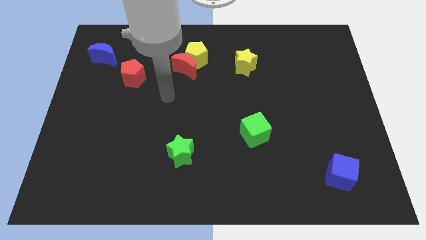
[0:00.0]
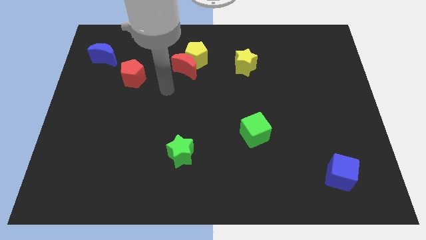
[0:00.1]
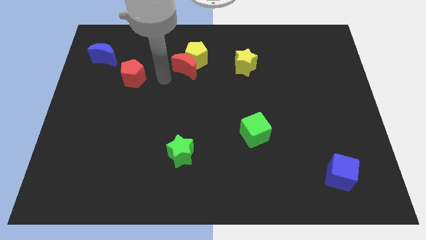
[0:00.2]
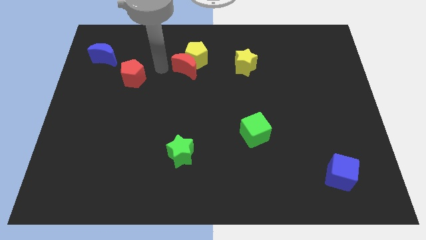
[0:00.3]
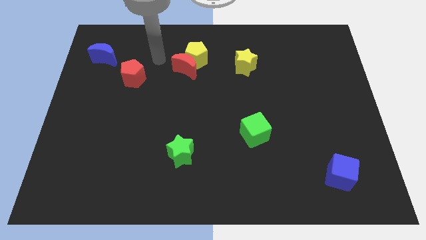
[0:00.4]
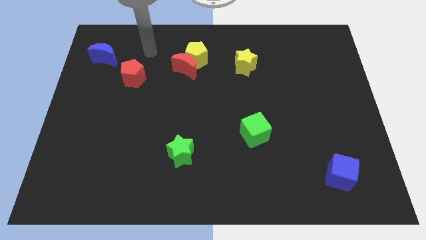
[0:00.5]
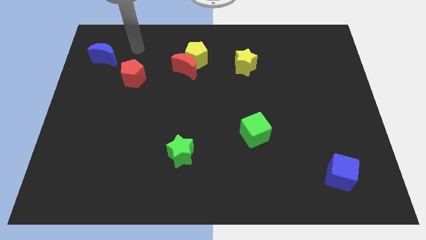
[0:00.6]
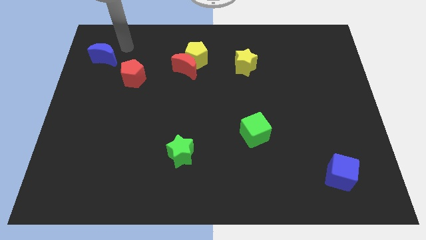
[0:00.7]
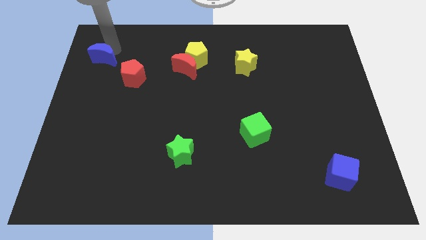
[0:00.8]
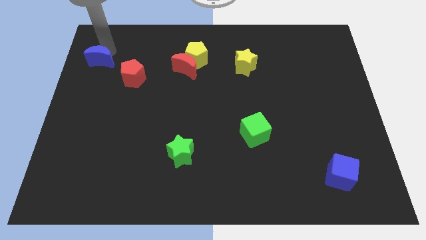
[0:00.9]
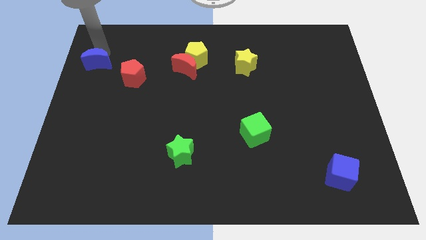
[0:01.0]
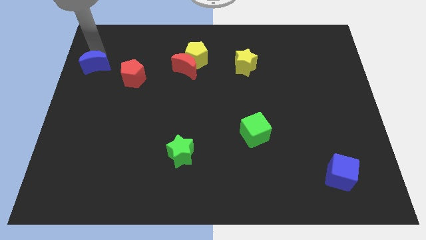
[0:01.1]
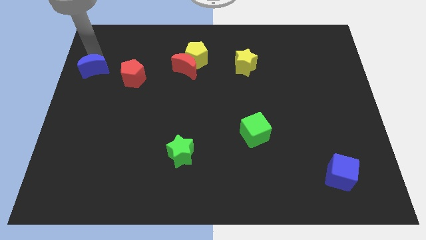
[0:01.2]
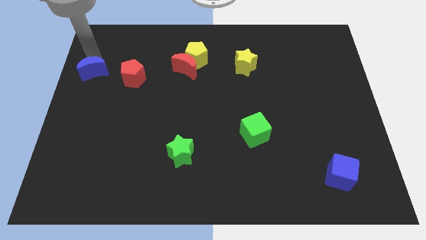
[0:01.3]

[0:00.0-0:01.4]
place blue moon to the left of red pentagon

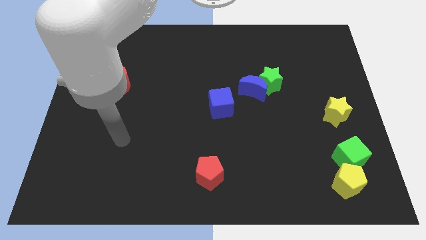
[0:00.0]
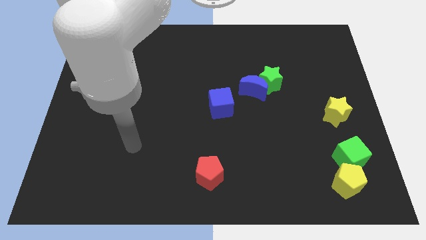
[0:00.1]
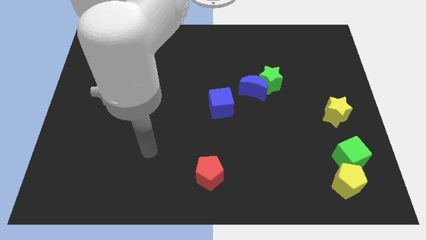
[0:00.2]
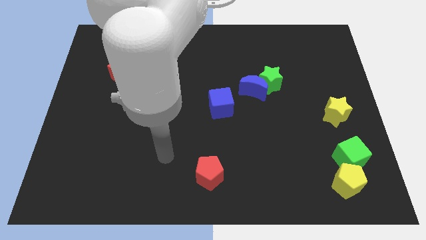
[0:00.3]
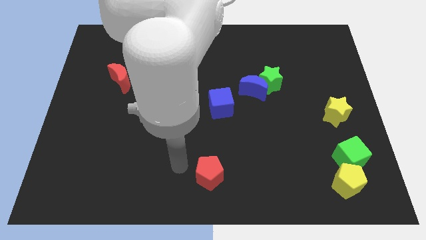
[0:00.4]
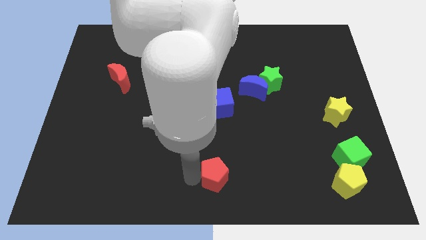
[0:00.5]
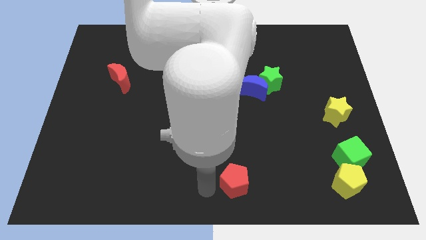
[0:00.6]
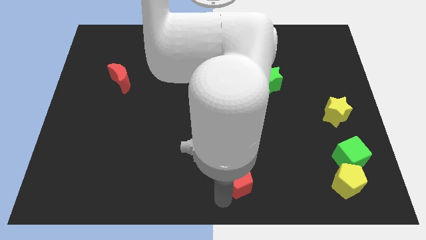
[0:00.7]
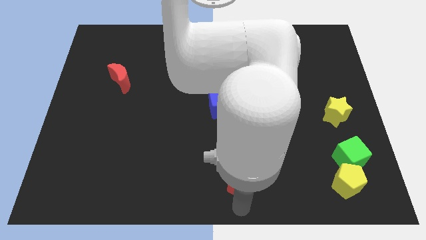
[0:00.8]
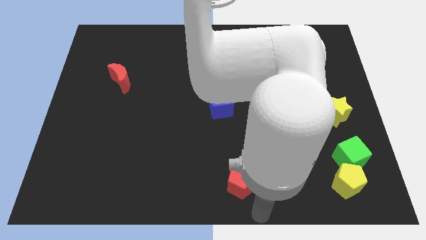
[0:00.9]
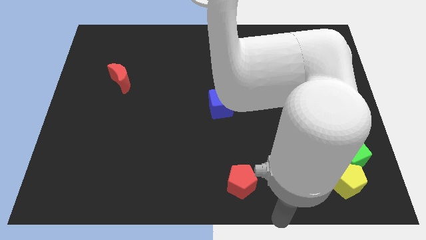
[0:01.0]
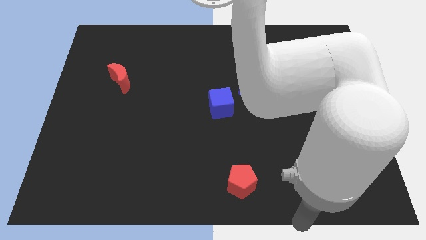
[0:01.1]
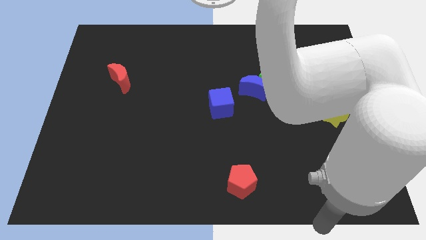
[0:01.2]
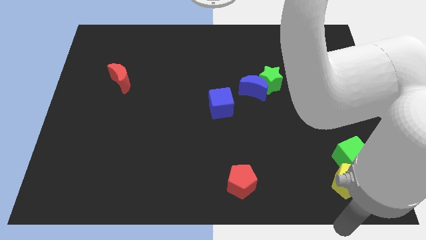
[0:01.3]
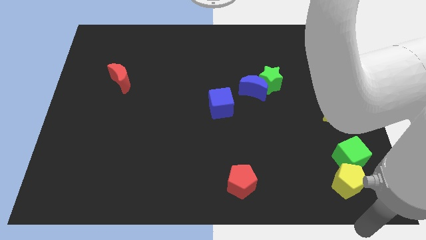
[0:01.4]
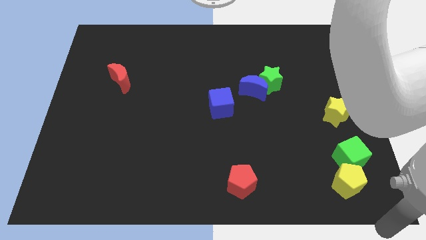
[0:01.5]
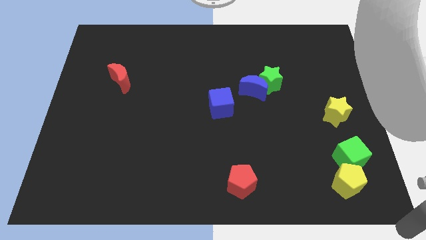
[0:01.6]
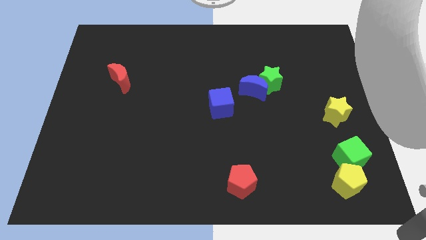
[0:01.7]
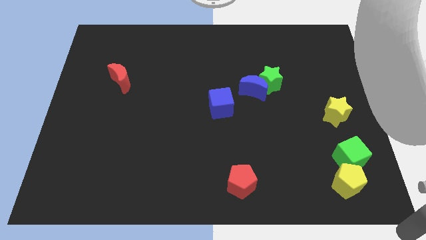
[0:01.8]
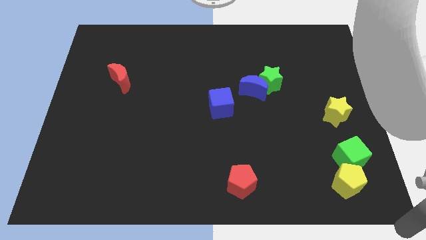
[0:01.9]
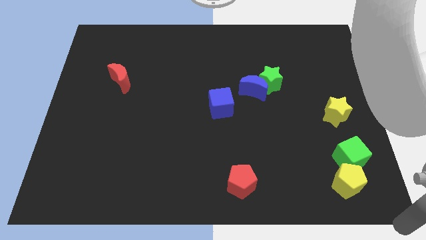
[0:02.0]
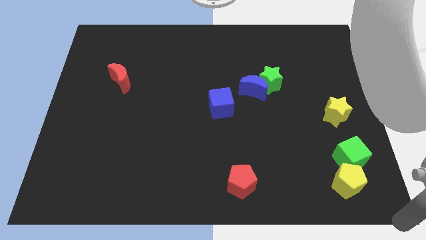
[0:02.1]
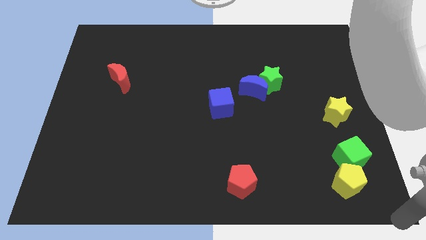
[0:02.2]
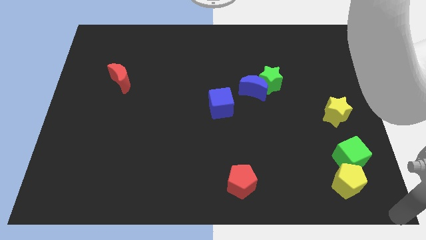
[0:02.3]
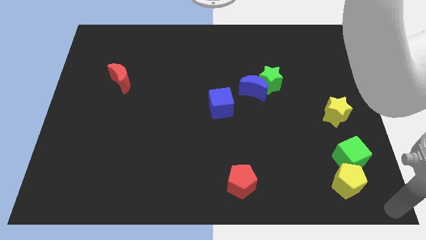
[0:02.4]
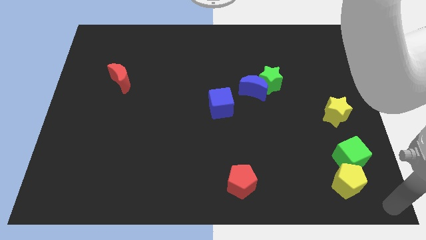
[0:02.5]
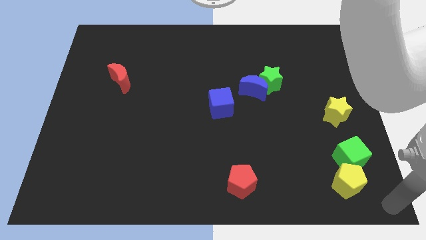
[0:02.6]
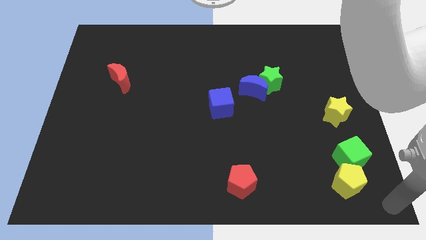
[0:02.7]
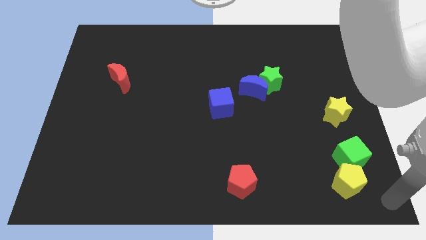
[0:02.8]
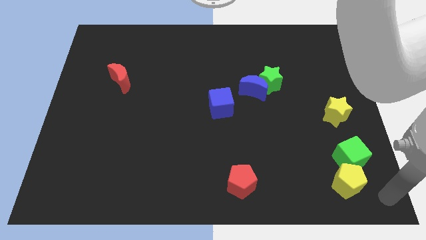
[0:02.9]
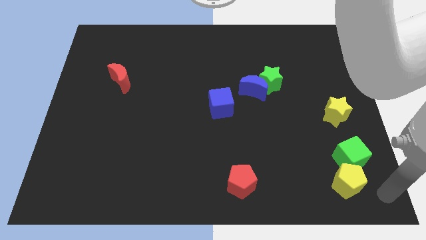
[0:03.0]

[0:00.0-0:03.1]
push the red pentagon slightly to the right

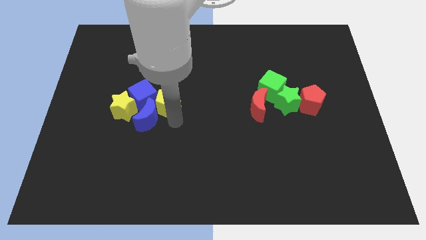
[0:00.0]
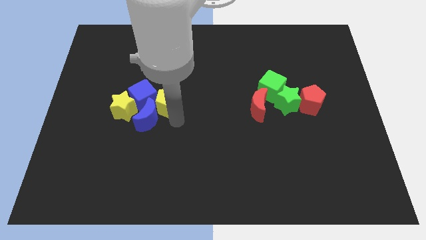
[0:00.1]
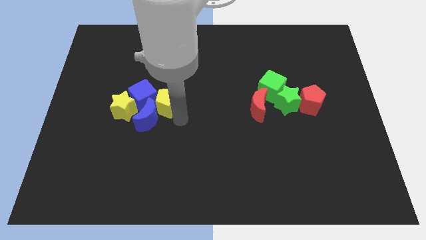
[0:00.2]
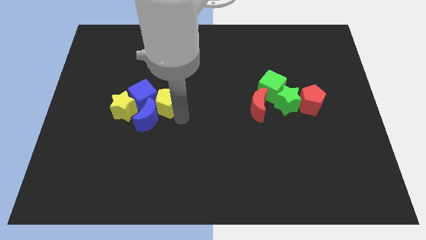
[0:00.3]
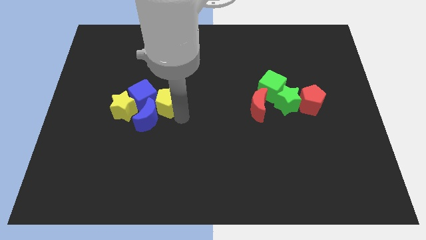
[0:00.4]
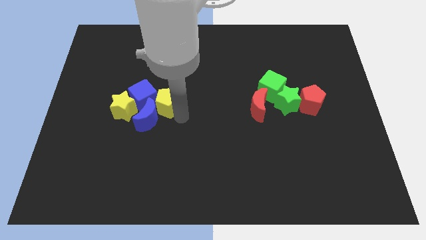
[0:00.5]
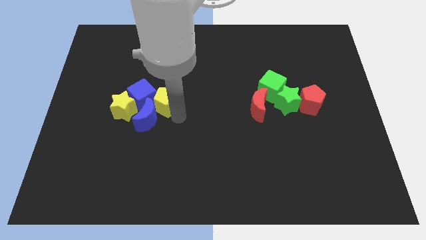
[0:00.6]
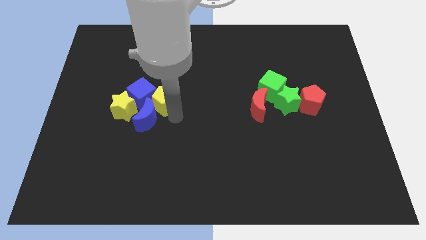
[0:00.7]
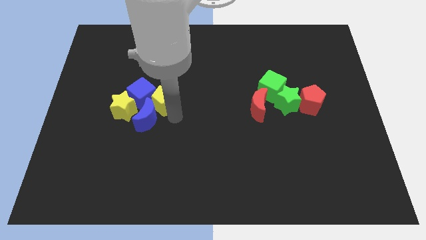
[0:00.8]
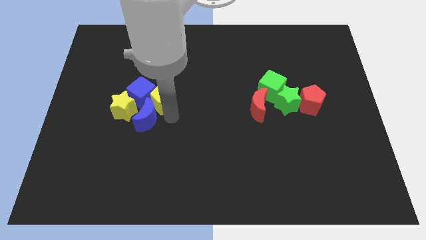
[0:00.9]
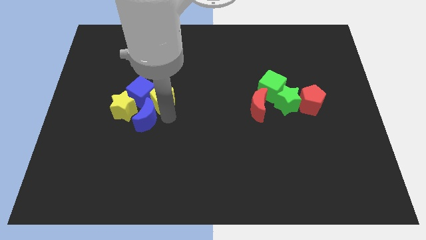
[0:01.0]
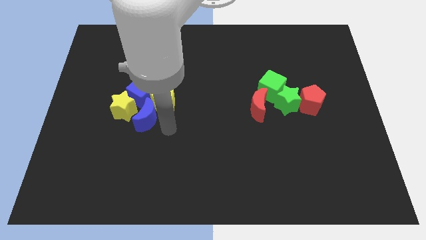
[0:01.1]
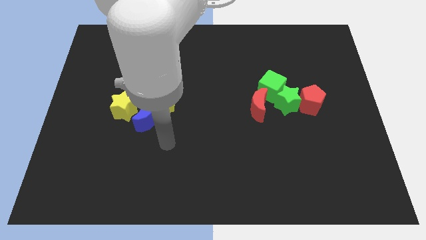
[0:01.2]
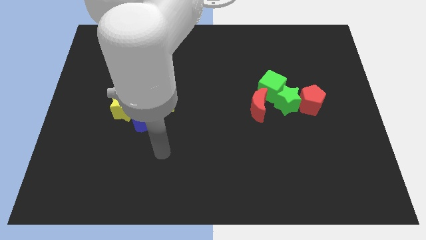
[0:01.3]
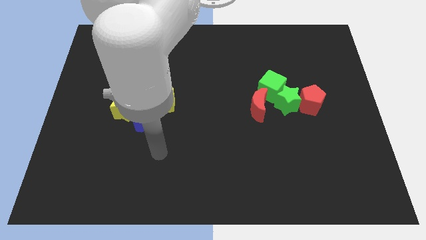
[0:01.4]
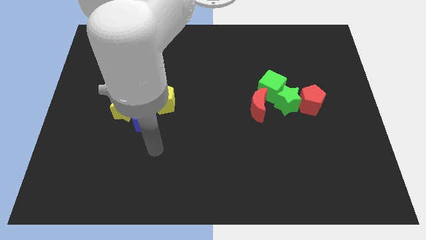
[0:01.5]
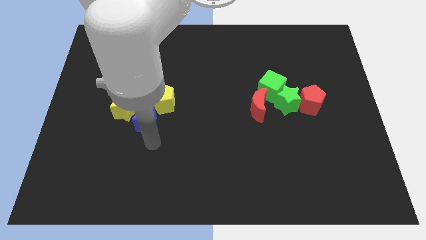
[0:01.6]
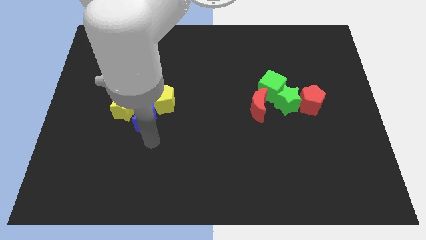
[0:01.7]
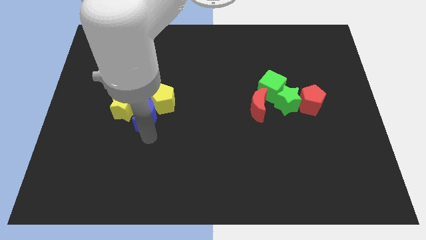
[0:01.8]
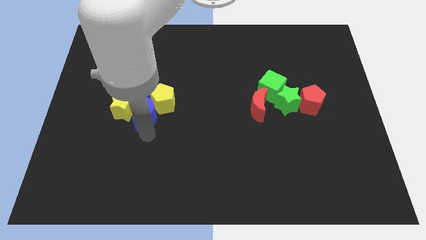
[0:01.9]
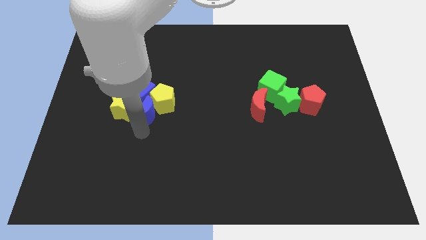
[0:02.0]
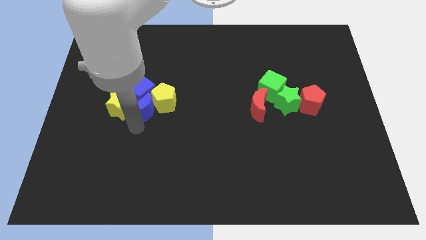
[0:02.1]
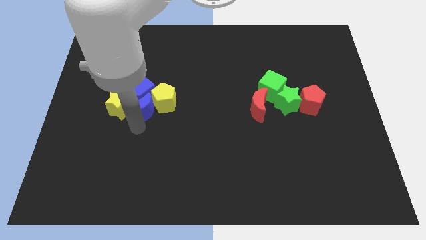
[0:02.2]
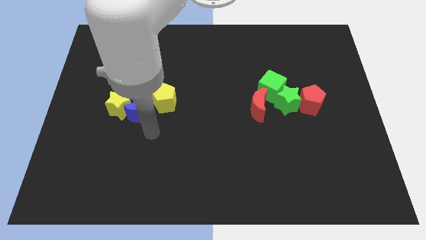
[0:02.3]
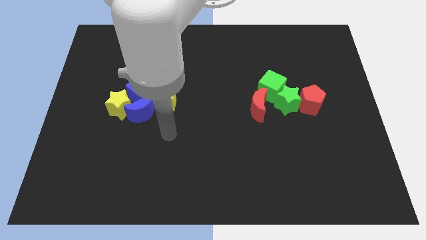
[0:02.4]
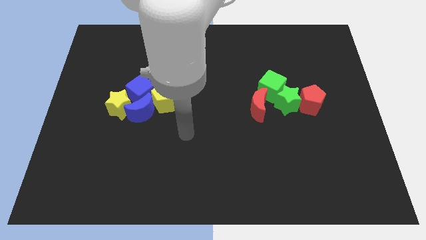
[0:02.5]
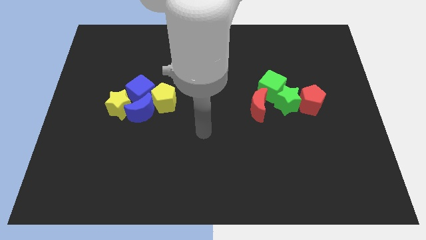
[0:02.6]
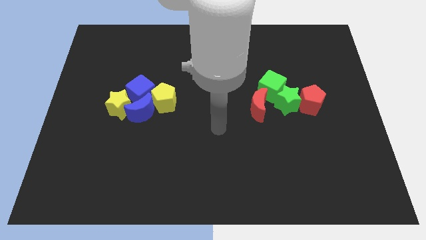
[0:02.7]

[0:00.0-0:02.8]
adjust the blue blocks in between the yellow blocks

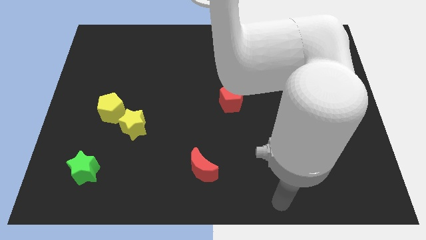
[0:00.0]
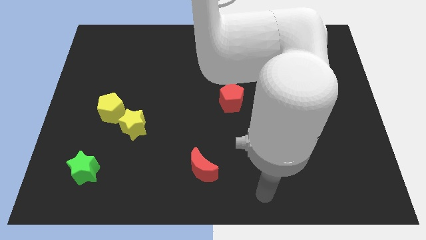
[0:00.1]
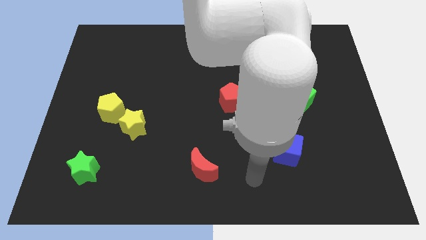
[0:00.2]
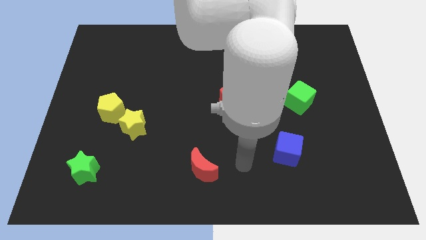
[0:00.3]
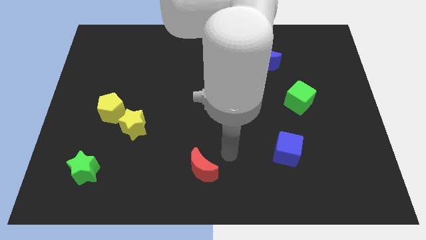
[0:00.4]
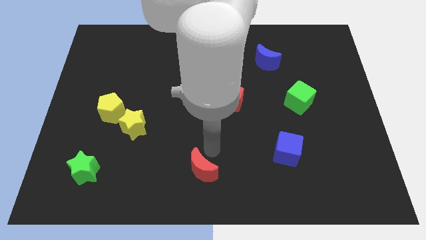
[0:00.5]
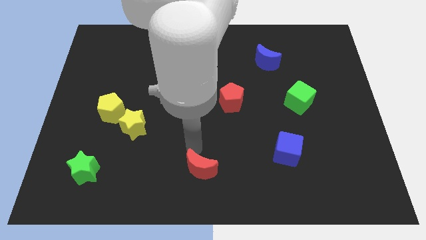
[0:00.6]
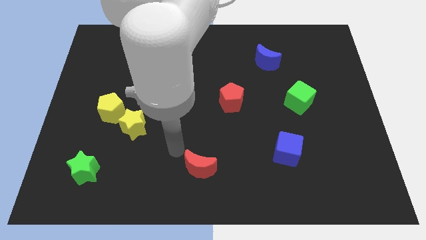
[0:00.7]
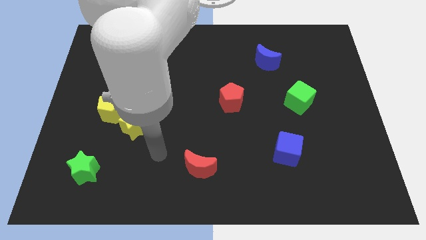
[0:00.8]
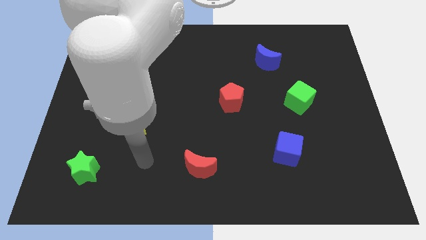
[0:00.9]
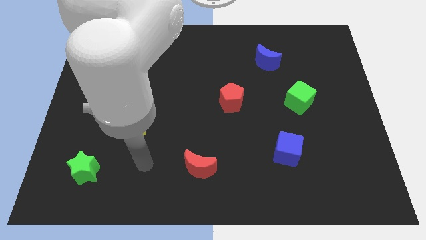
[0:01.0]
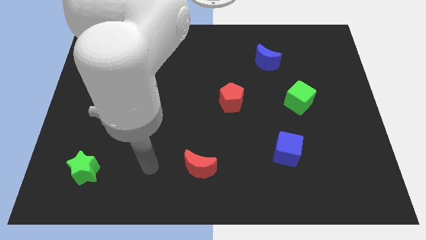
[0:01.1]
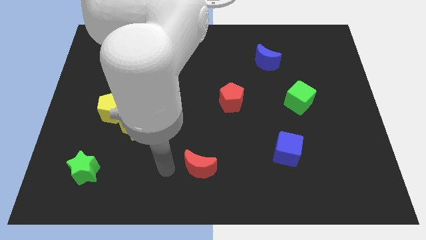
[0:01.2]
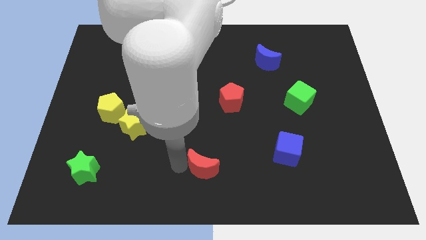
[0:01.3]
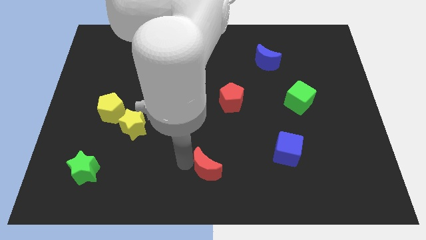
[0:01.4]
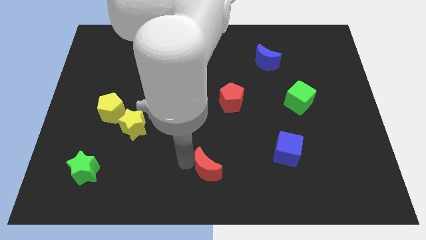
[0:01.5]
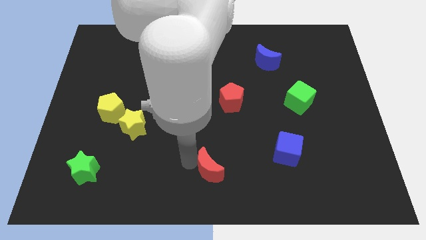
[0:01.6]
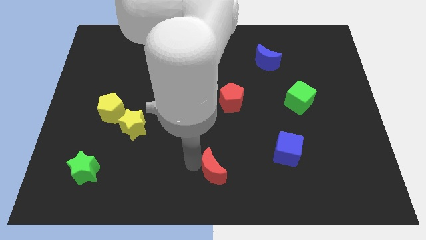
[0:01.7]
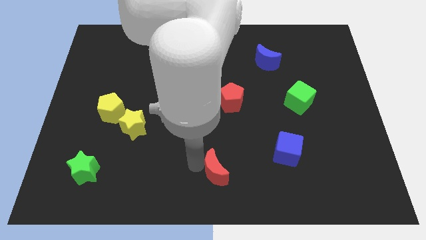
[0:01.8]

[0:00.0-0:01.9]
slightly drag the red crescent towards right
